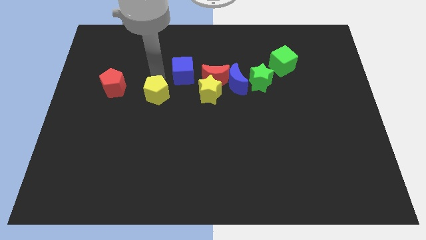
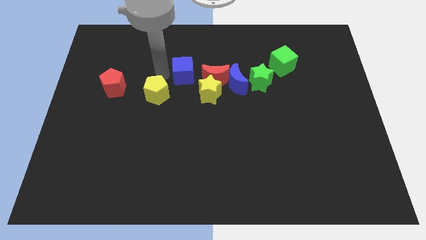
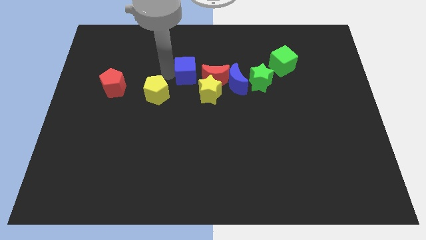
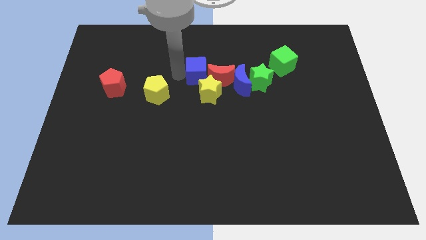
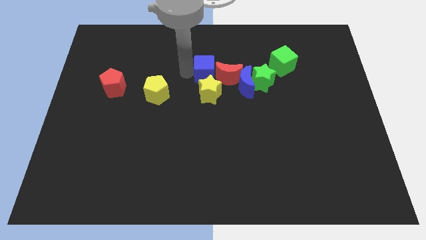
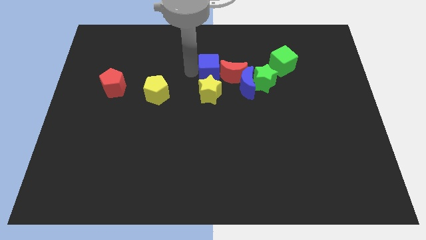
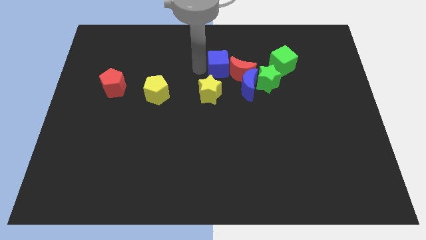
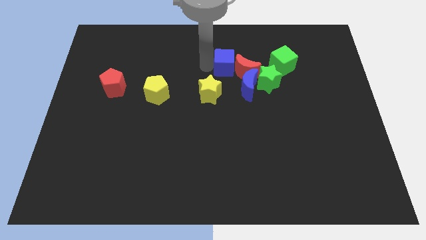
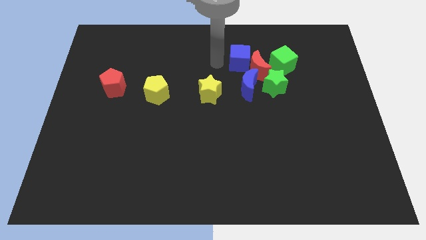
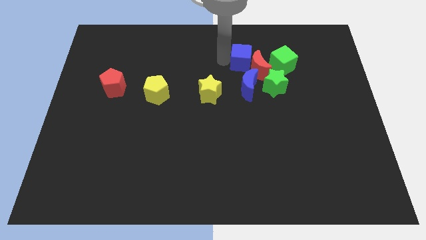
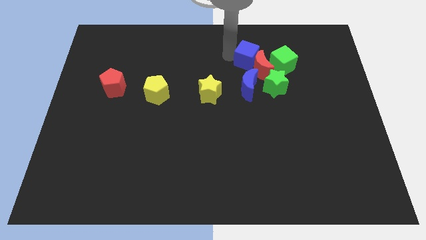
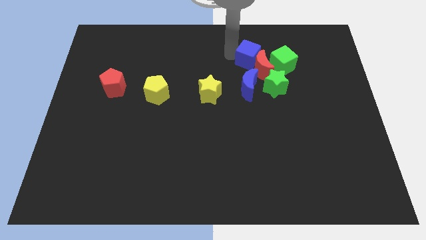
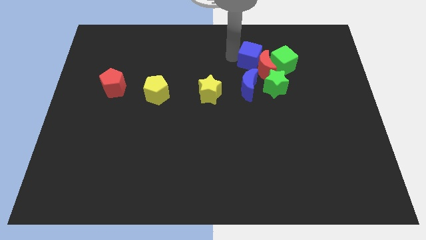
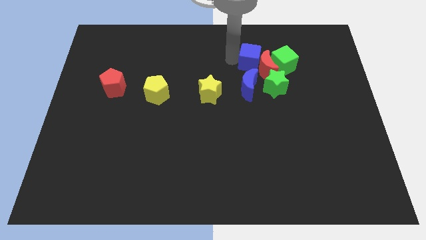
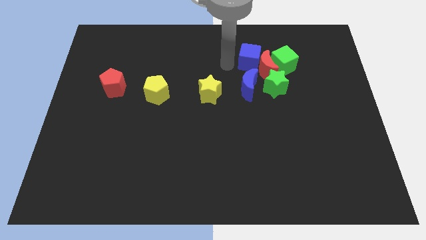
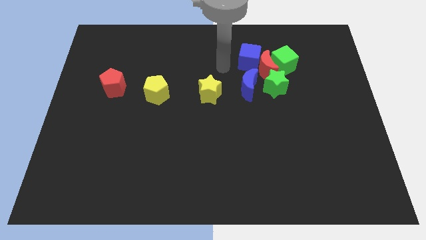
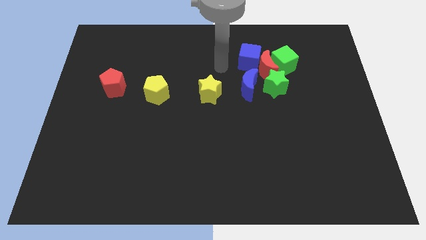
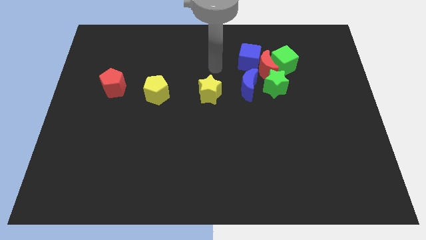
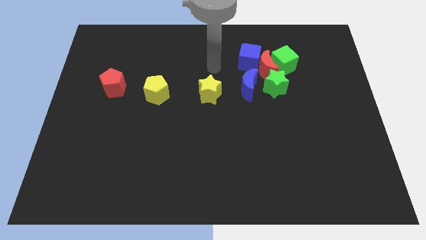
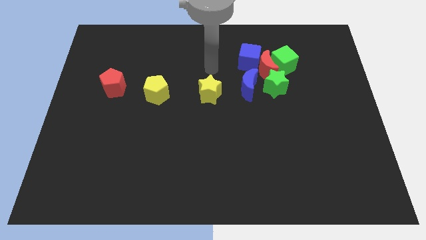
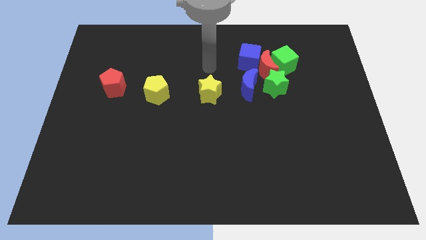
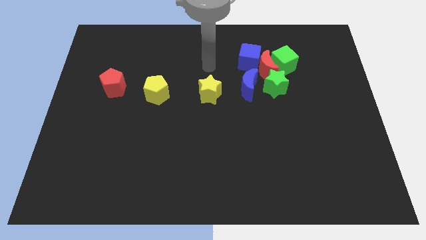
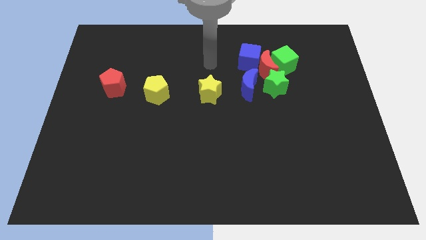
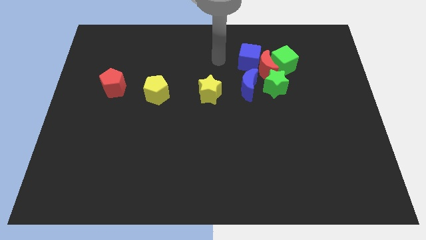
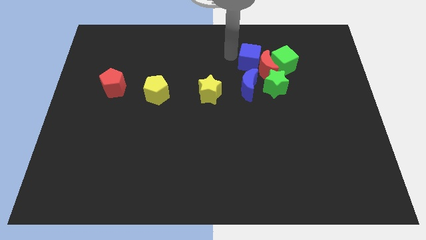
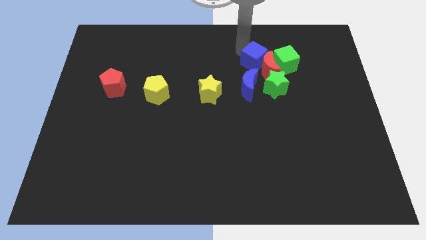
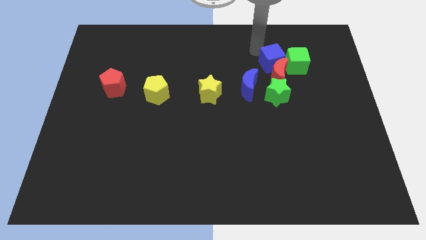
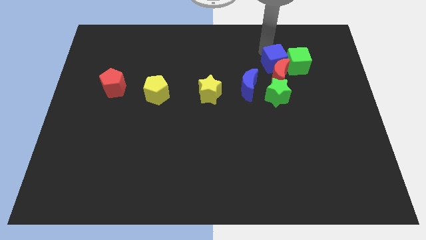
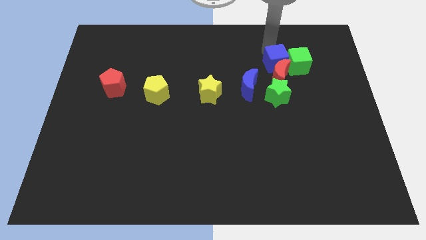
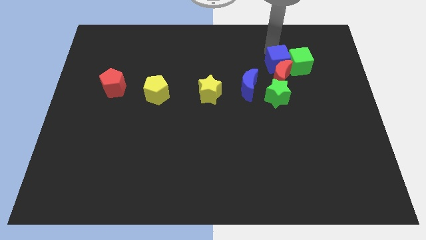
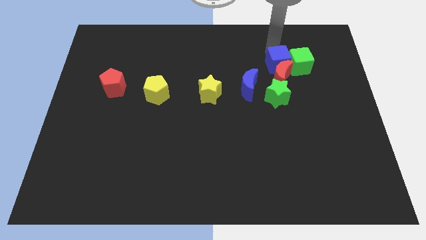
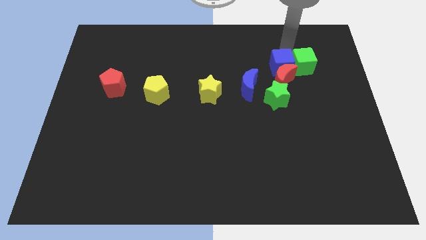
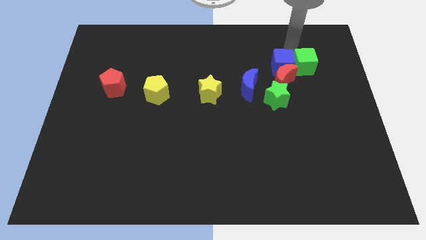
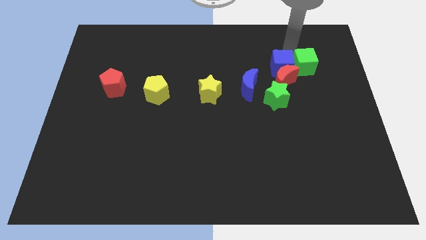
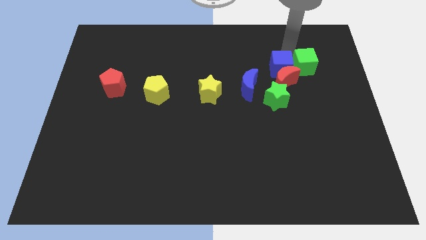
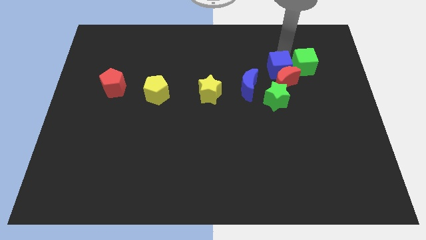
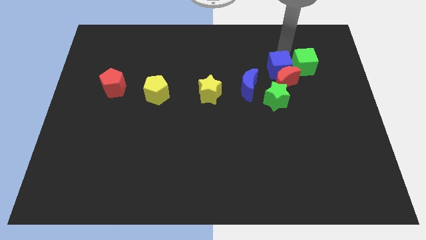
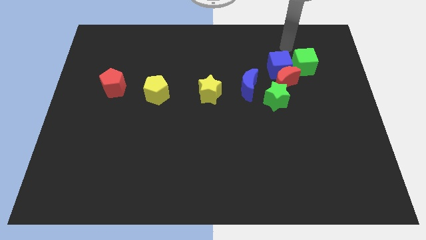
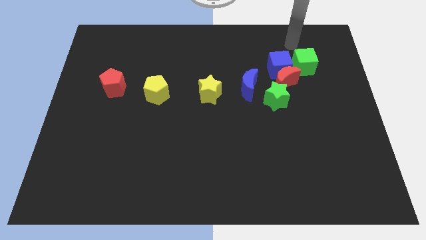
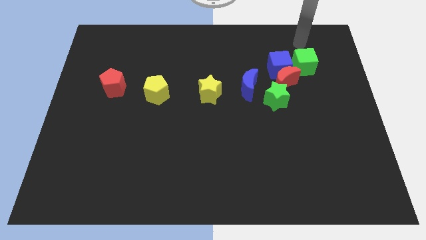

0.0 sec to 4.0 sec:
move the blue cube to the top side of the red moon

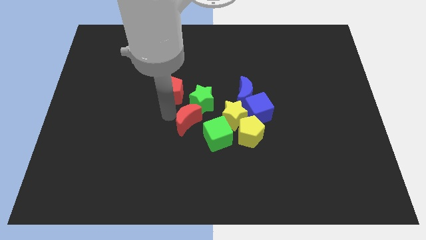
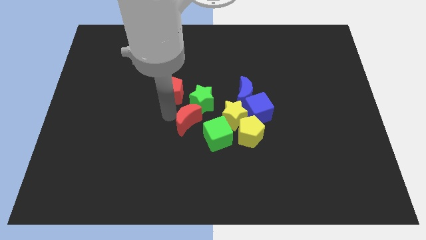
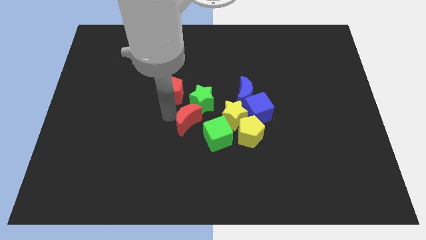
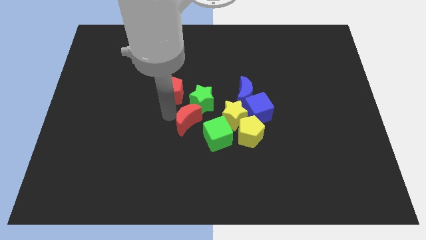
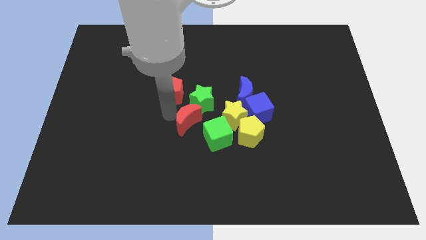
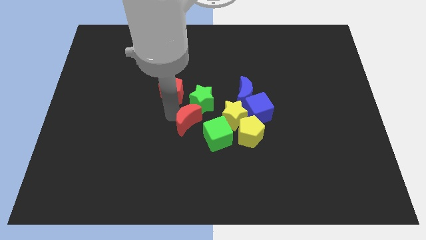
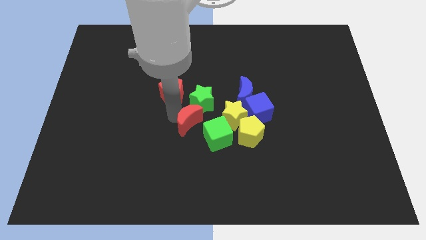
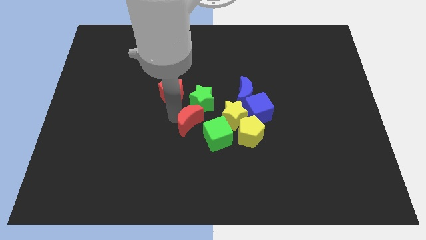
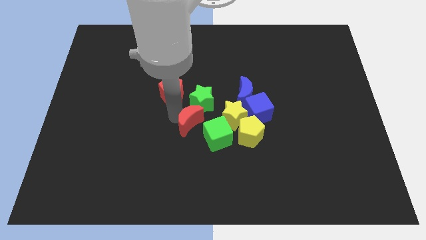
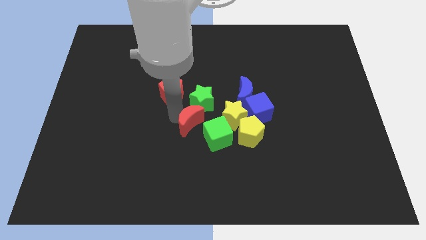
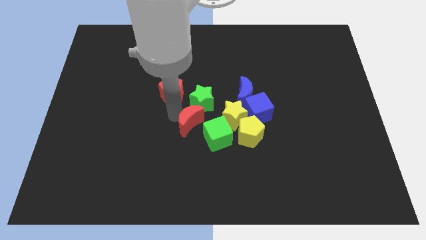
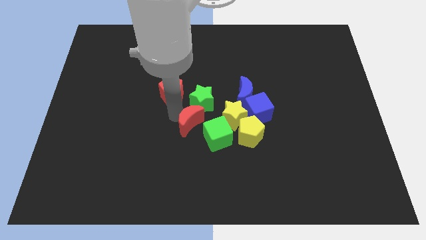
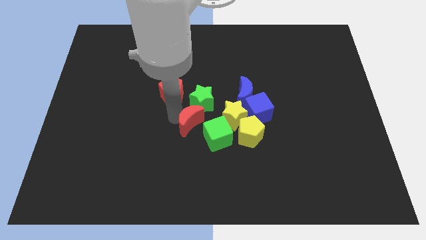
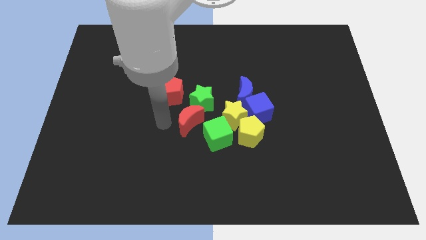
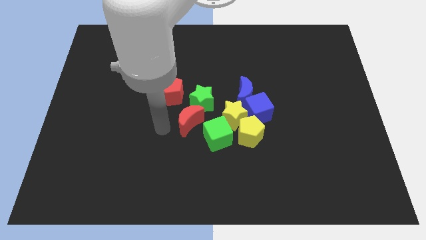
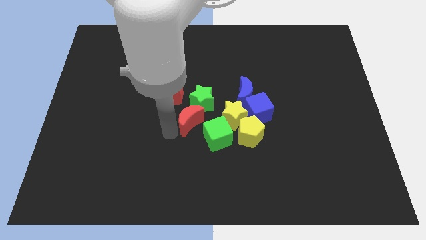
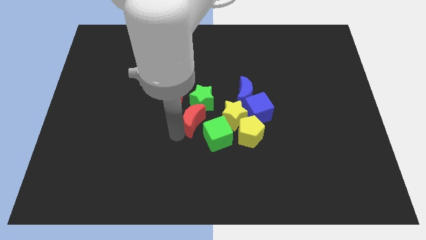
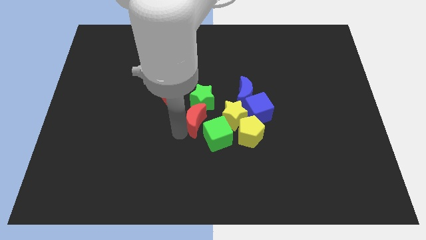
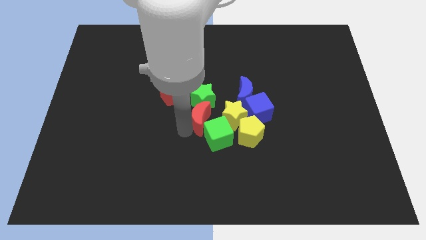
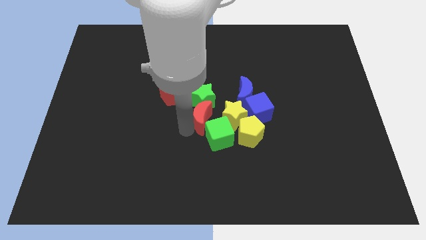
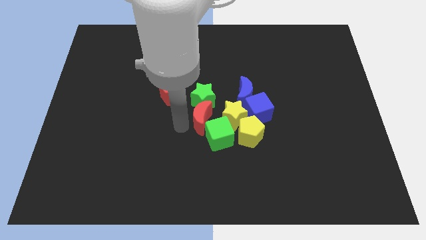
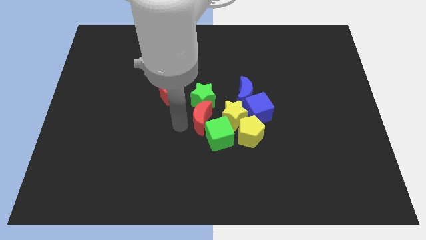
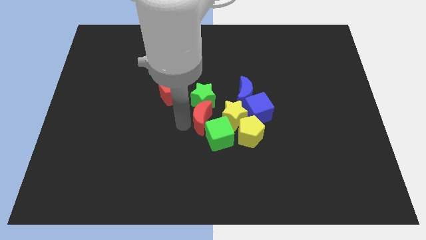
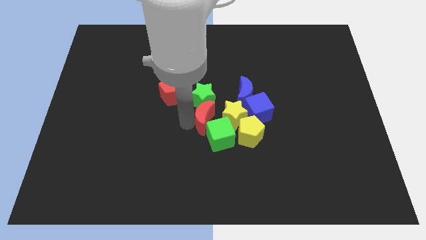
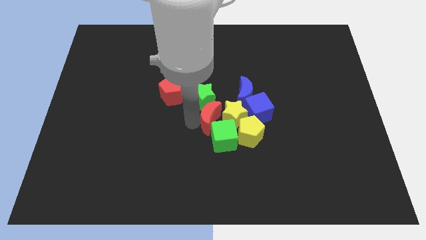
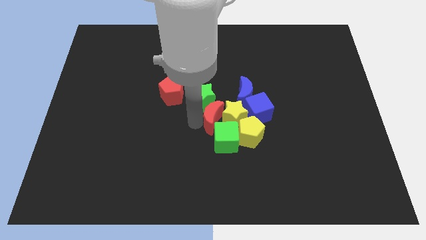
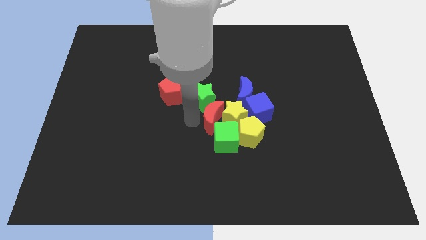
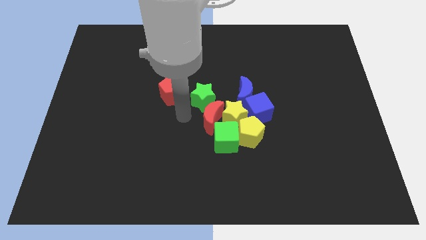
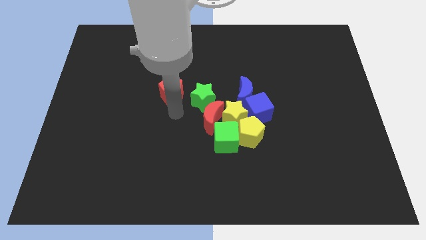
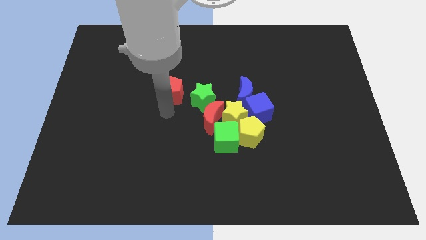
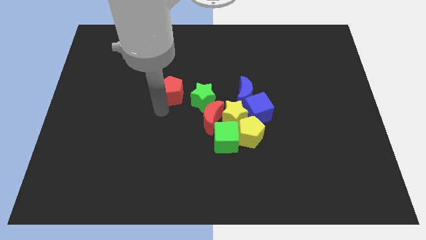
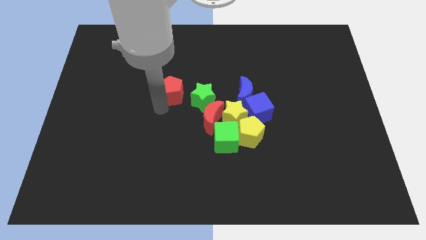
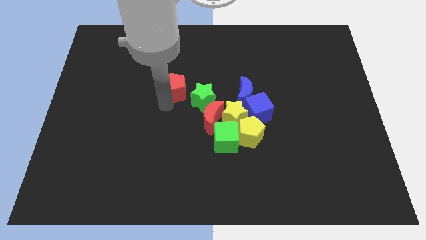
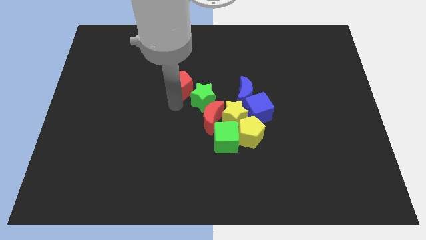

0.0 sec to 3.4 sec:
push the red crescent into the left side of the yellow star

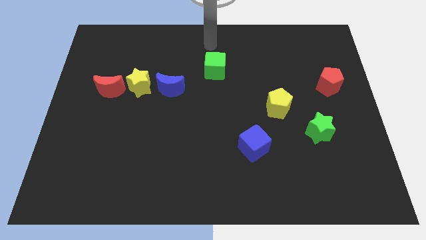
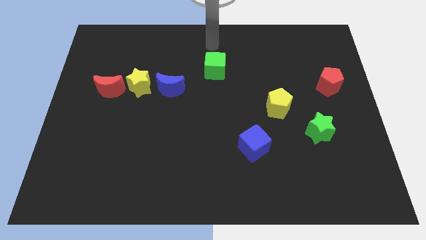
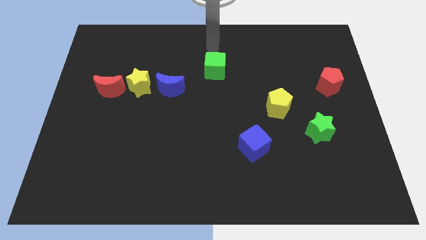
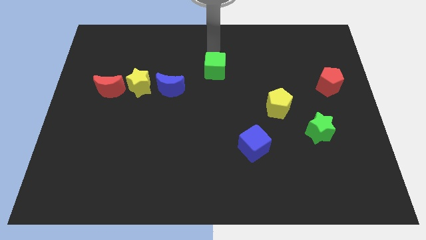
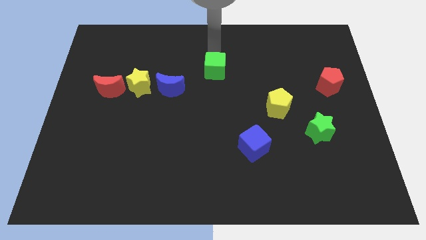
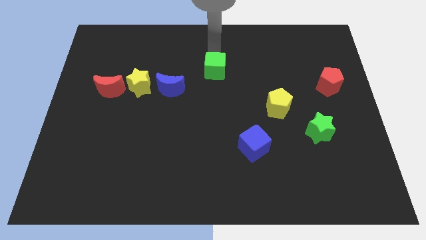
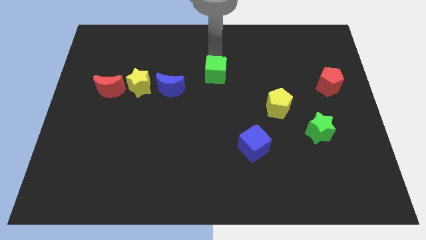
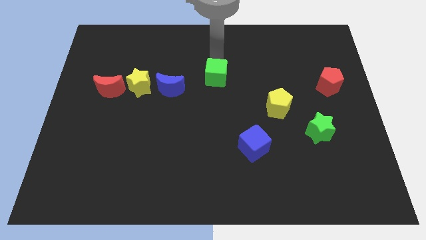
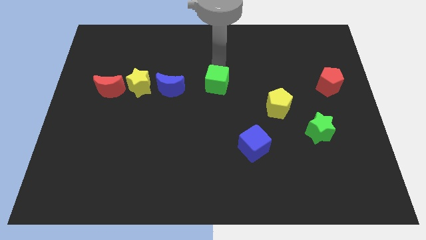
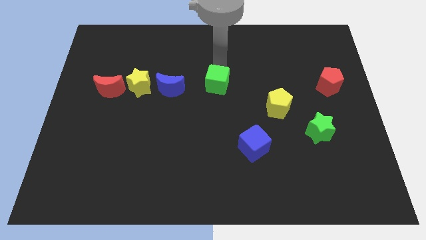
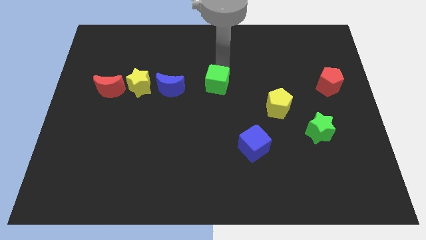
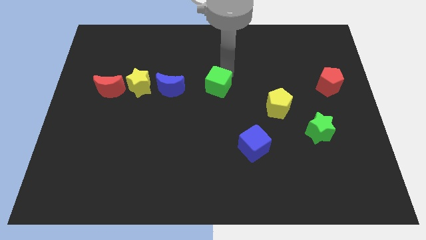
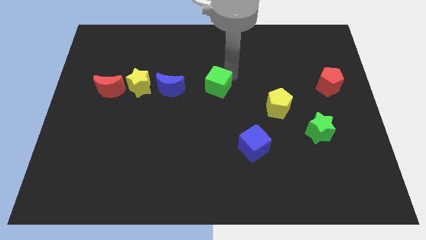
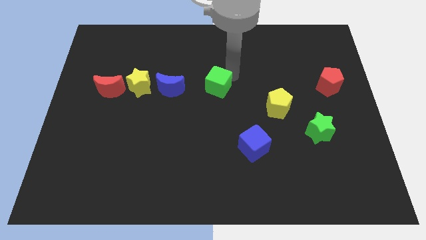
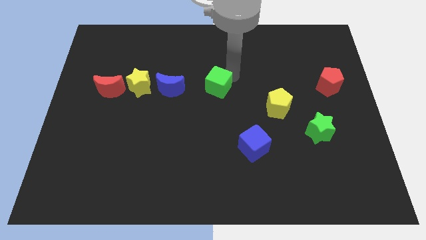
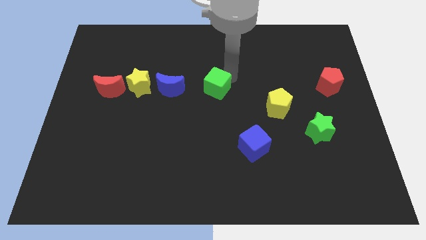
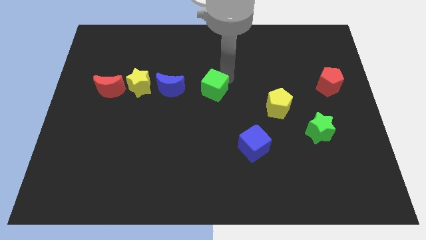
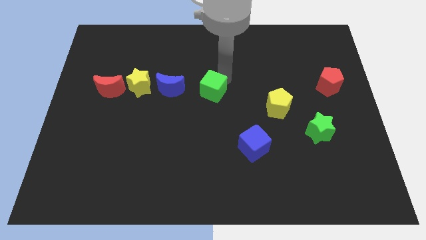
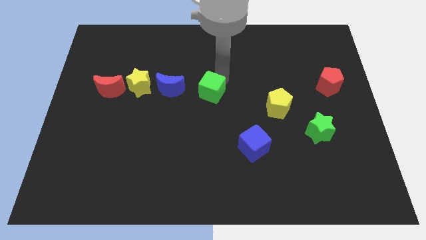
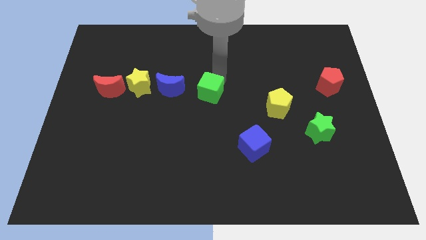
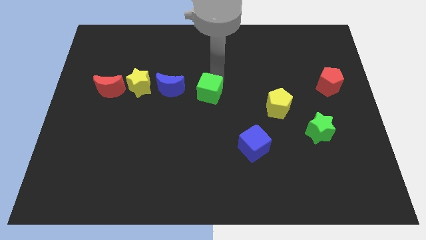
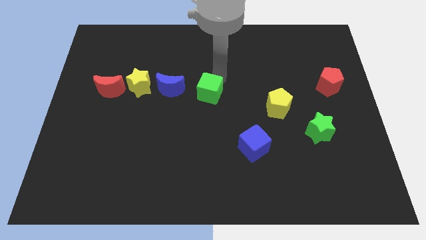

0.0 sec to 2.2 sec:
place the green cube to the right of the blue crescent
